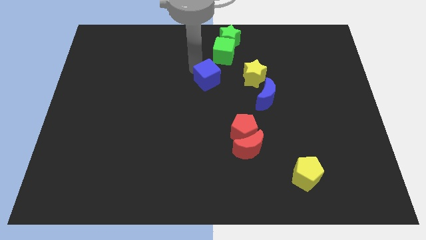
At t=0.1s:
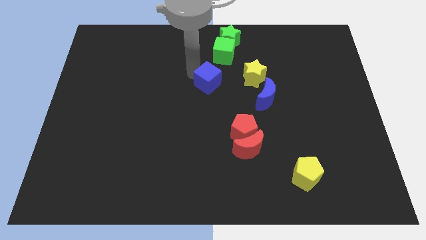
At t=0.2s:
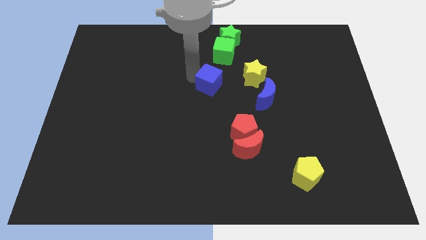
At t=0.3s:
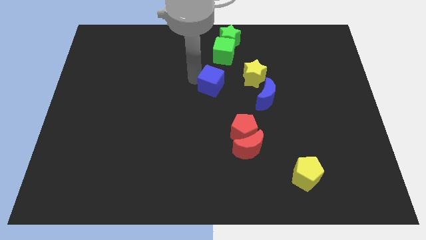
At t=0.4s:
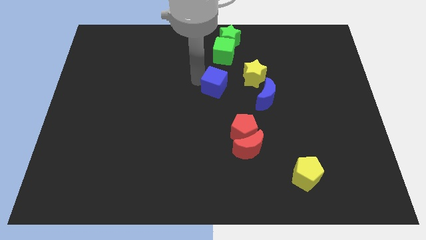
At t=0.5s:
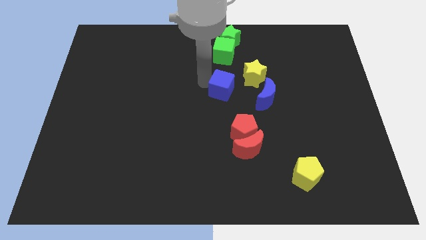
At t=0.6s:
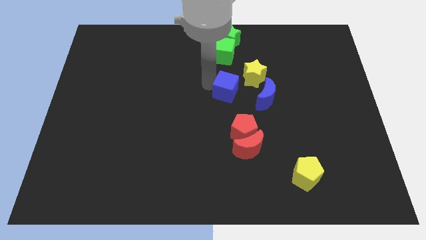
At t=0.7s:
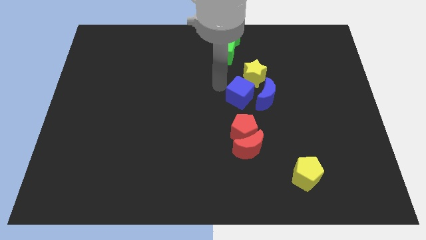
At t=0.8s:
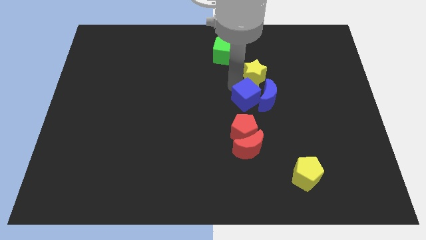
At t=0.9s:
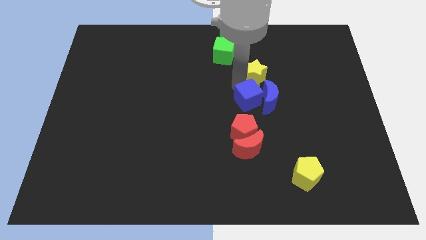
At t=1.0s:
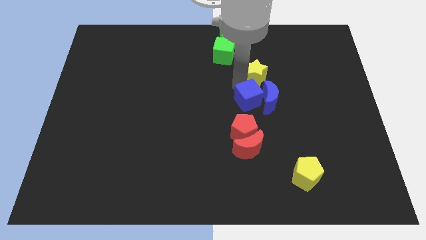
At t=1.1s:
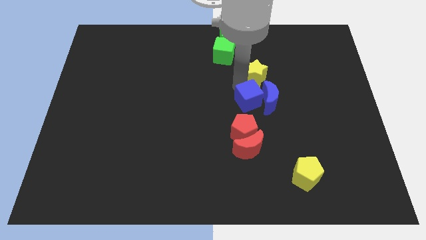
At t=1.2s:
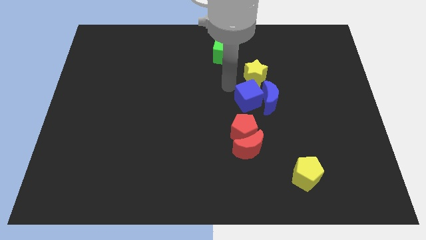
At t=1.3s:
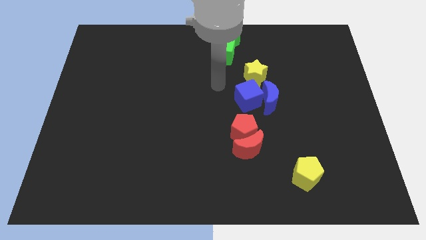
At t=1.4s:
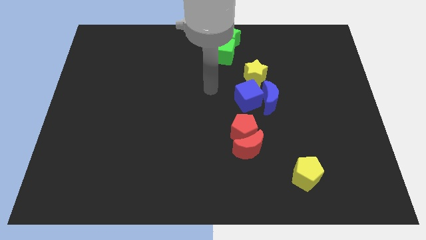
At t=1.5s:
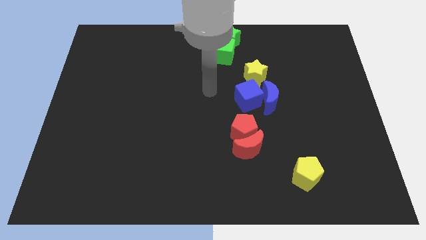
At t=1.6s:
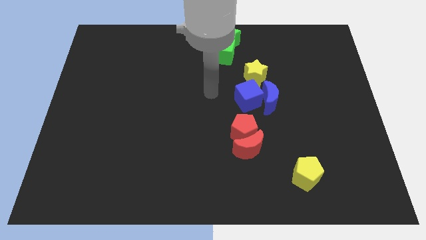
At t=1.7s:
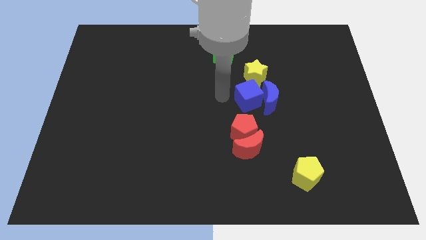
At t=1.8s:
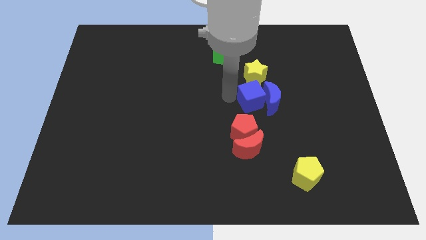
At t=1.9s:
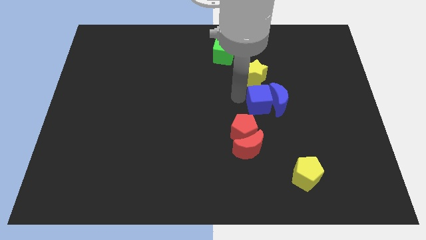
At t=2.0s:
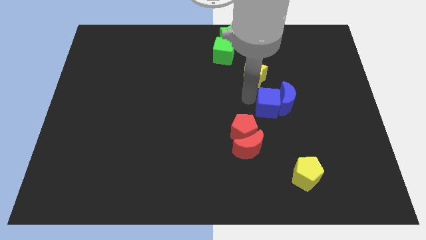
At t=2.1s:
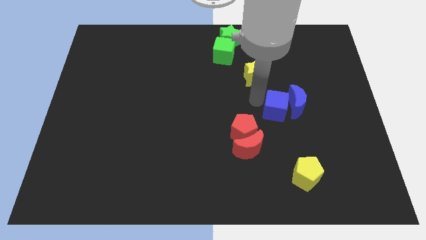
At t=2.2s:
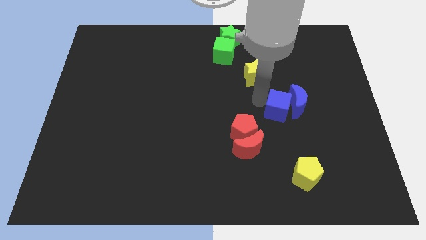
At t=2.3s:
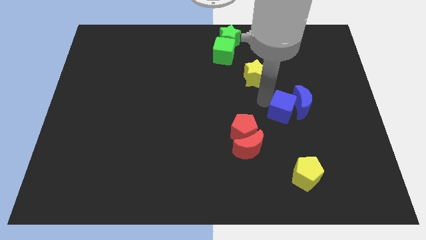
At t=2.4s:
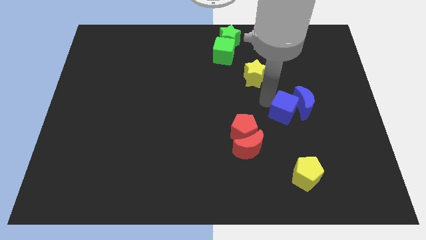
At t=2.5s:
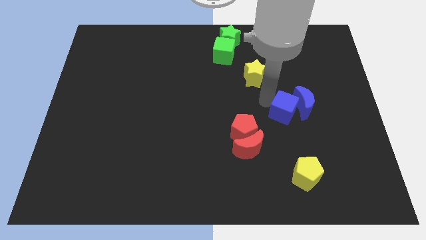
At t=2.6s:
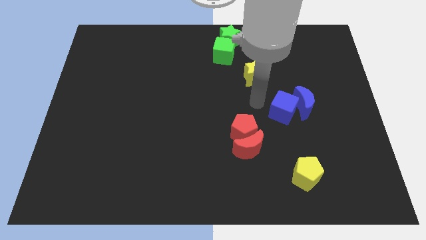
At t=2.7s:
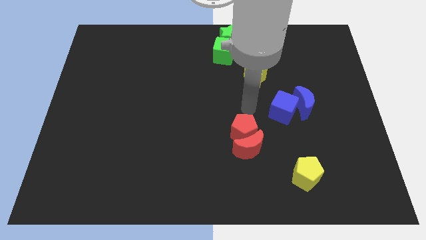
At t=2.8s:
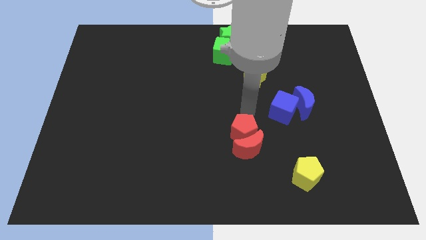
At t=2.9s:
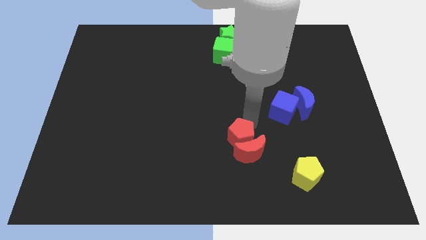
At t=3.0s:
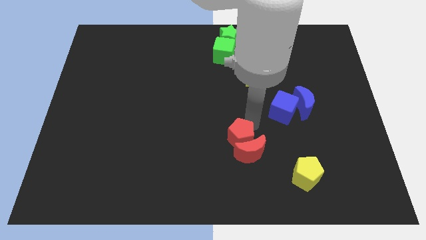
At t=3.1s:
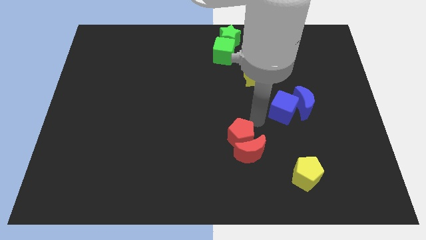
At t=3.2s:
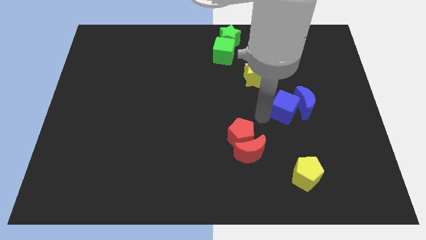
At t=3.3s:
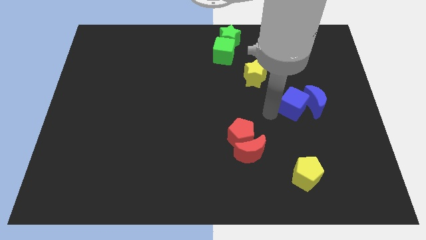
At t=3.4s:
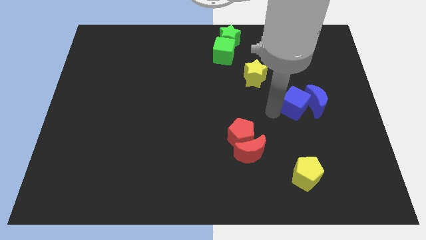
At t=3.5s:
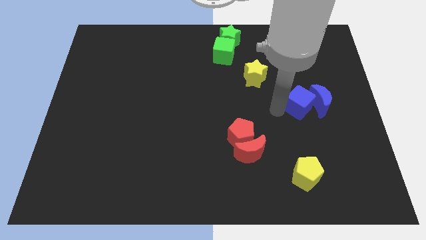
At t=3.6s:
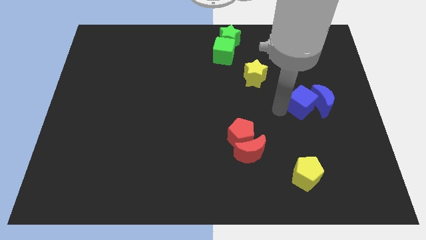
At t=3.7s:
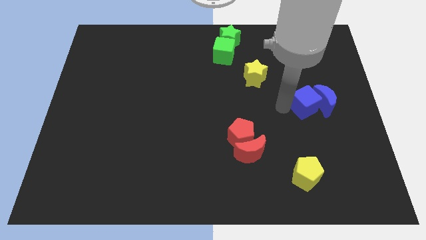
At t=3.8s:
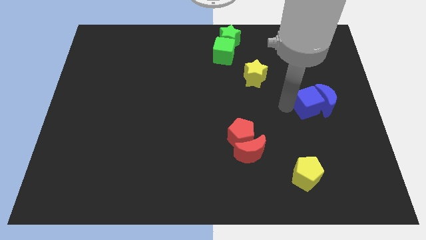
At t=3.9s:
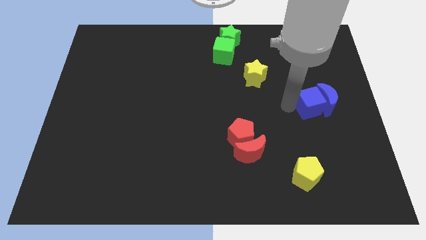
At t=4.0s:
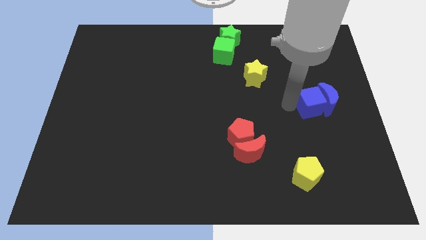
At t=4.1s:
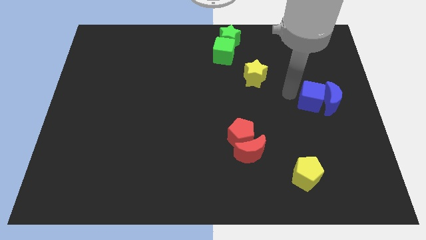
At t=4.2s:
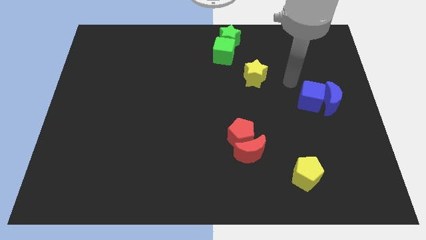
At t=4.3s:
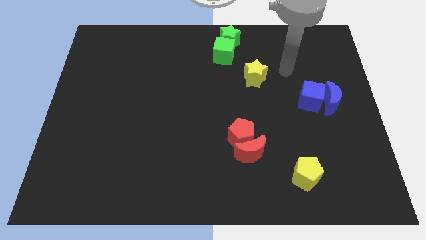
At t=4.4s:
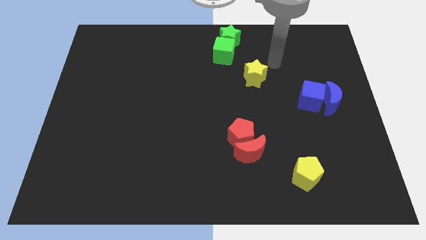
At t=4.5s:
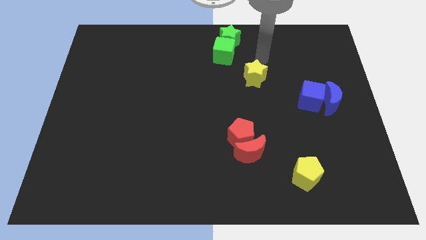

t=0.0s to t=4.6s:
push both the blue blocks towards the center left side of the board

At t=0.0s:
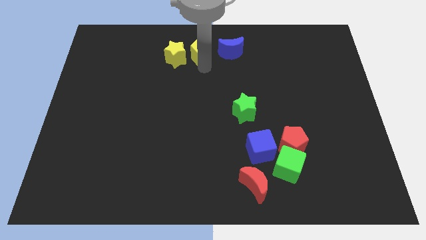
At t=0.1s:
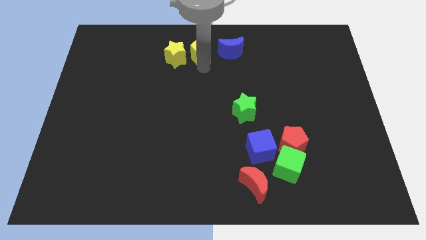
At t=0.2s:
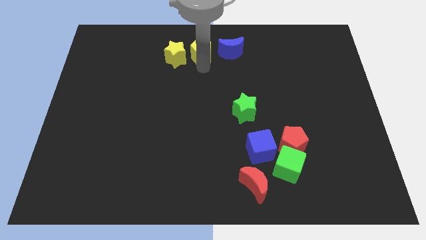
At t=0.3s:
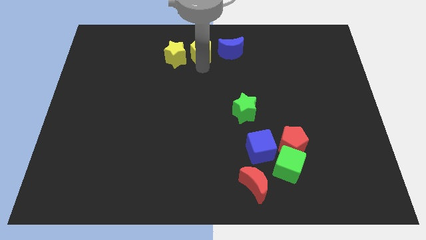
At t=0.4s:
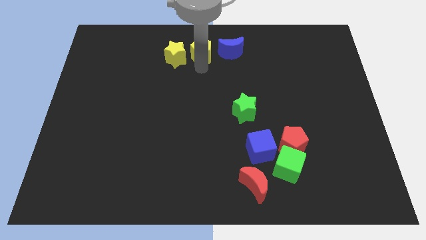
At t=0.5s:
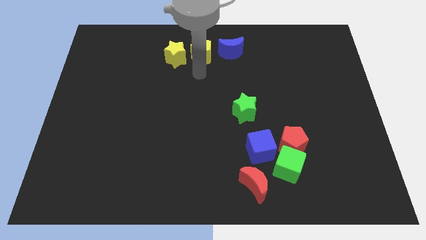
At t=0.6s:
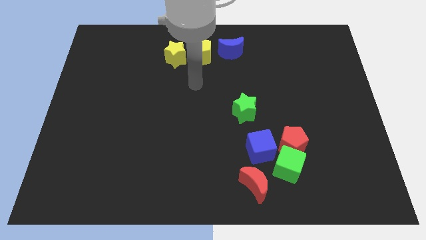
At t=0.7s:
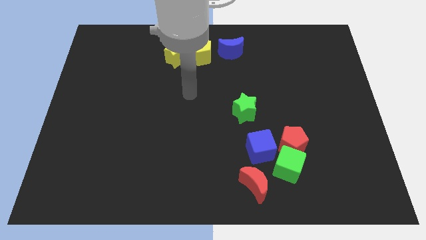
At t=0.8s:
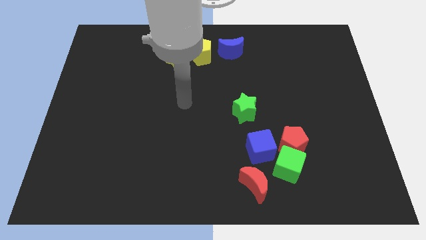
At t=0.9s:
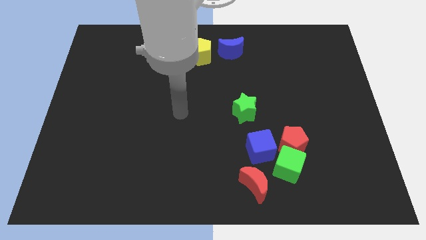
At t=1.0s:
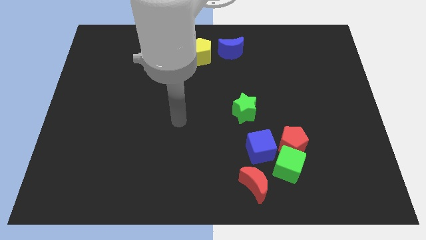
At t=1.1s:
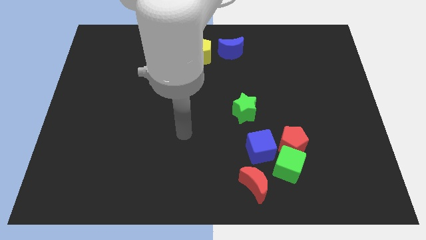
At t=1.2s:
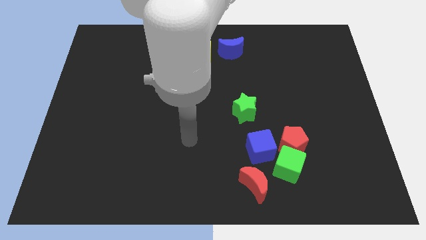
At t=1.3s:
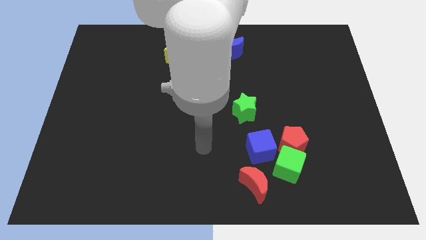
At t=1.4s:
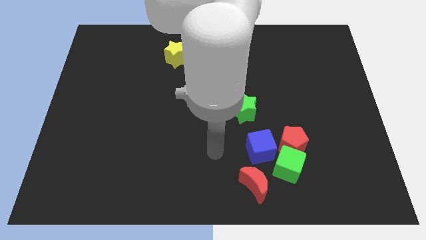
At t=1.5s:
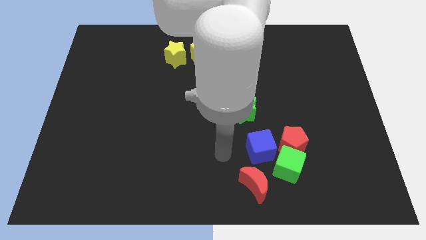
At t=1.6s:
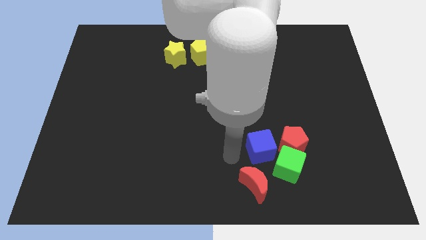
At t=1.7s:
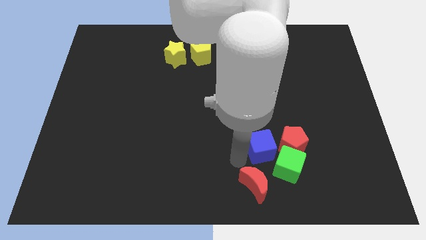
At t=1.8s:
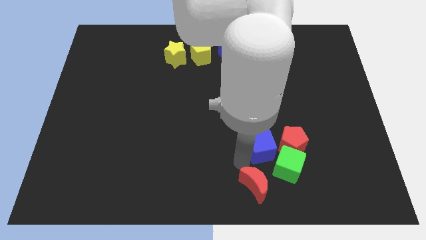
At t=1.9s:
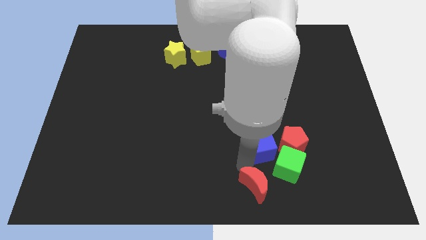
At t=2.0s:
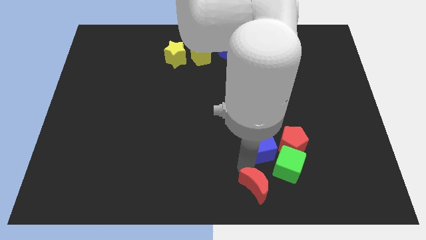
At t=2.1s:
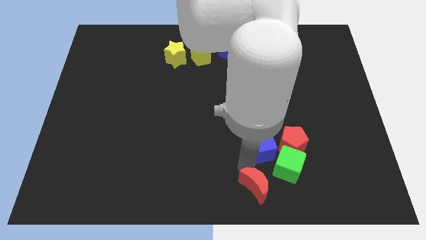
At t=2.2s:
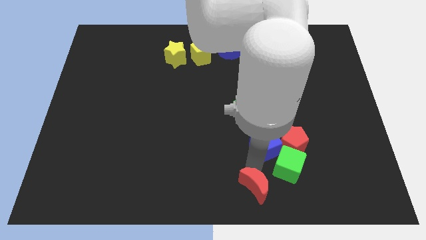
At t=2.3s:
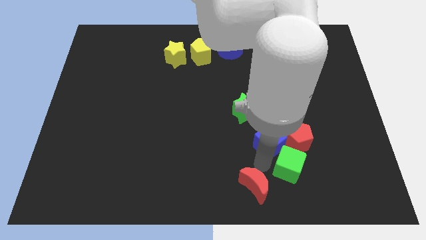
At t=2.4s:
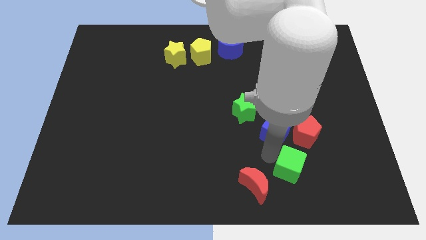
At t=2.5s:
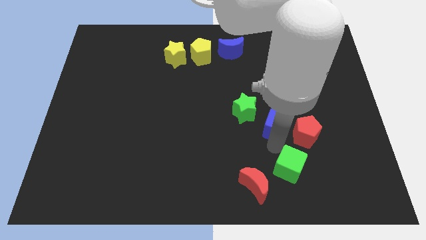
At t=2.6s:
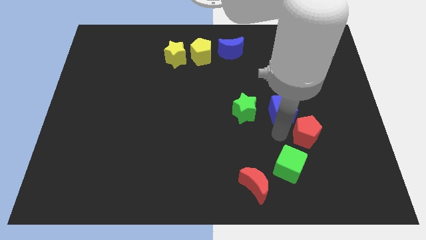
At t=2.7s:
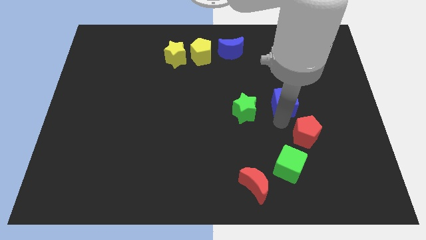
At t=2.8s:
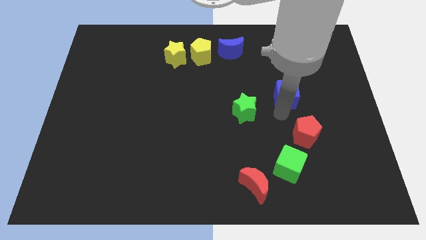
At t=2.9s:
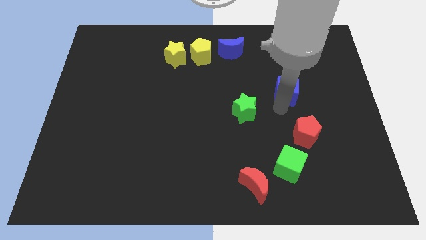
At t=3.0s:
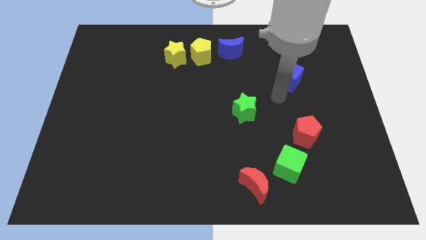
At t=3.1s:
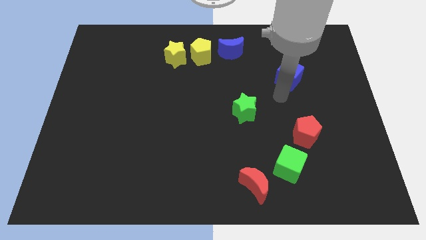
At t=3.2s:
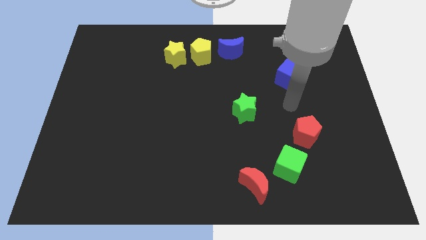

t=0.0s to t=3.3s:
push the blue cube diagonally to red crescent

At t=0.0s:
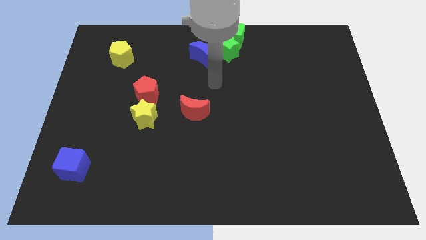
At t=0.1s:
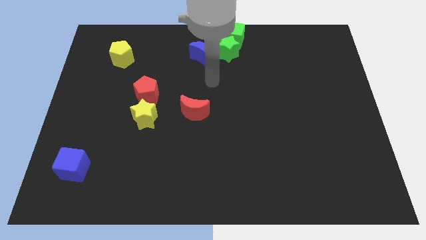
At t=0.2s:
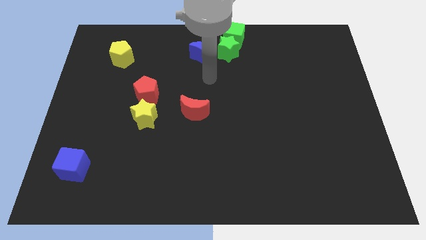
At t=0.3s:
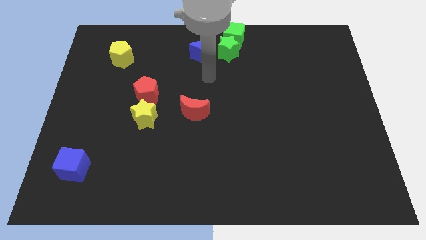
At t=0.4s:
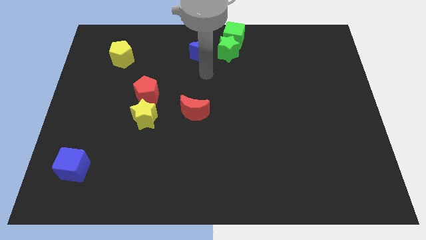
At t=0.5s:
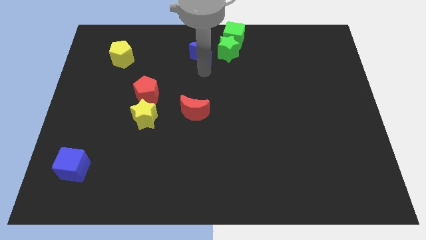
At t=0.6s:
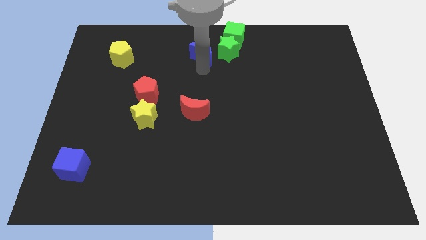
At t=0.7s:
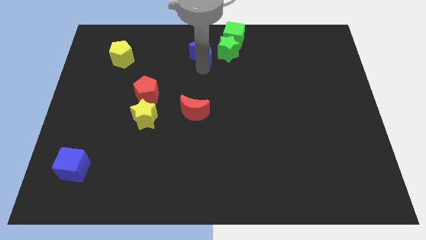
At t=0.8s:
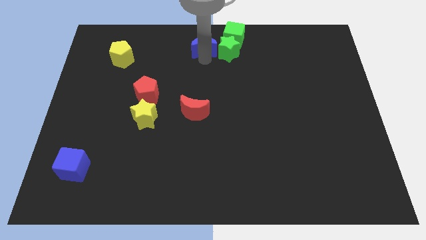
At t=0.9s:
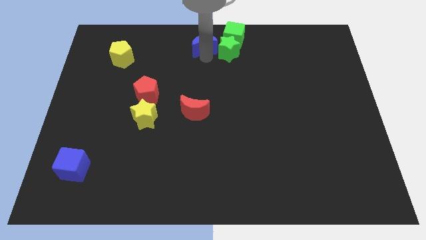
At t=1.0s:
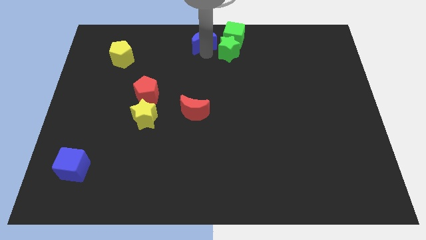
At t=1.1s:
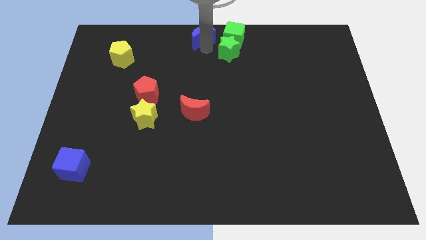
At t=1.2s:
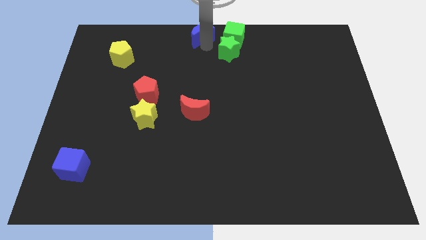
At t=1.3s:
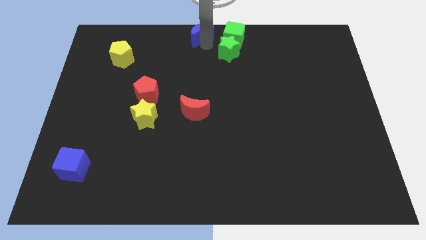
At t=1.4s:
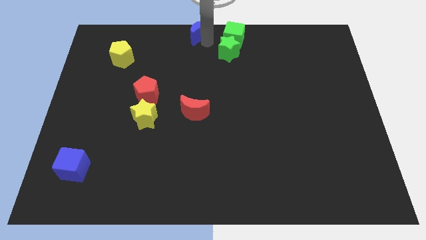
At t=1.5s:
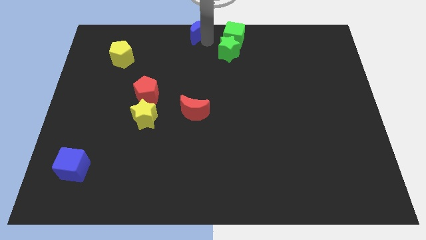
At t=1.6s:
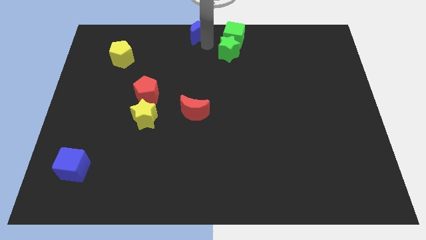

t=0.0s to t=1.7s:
put the blue moon left to the green cube
